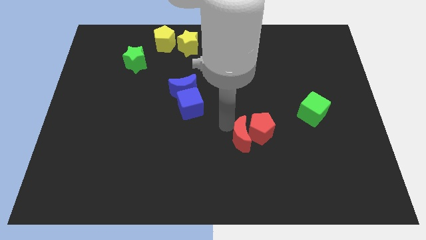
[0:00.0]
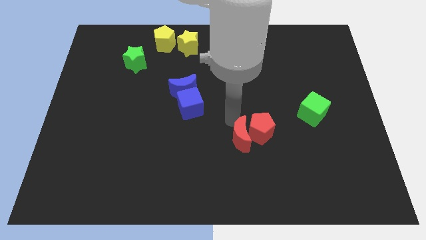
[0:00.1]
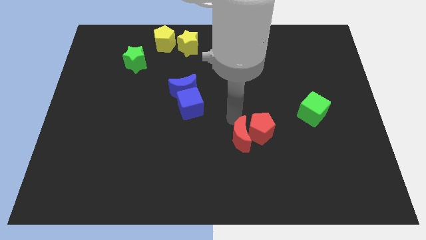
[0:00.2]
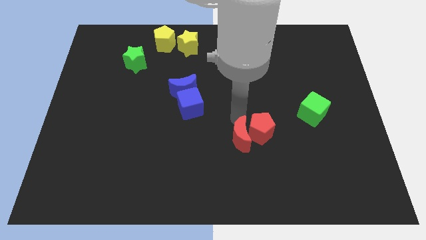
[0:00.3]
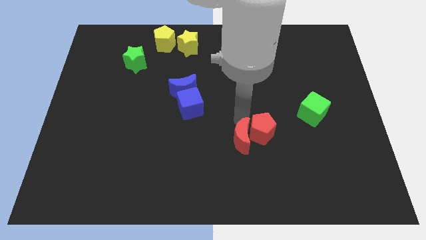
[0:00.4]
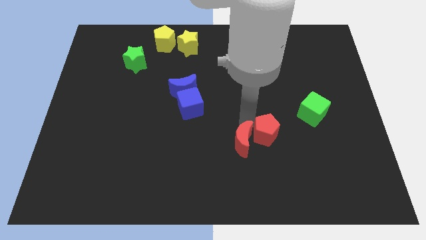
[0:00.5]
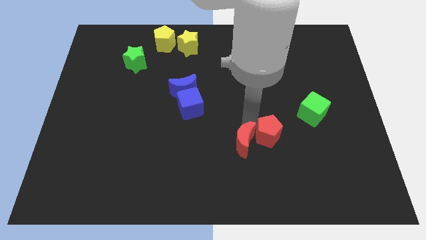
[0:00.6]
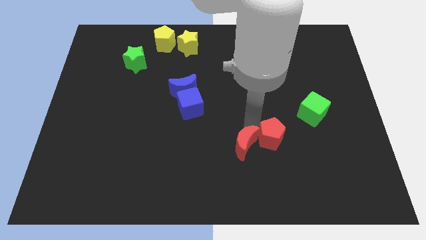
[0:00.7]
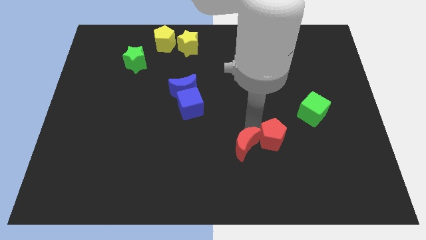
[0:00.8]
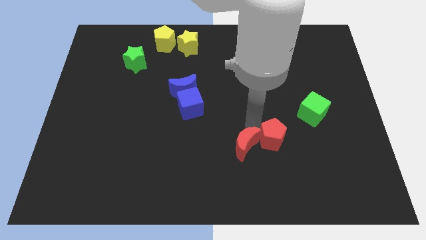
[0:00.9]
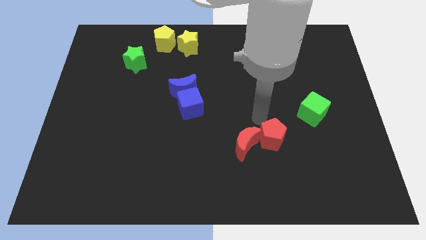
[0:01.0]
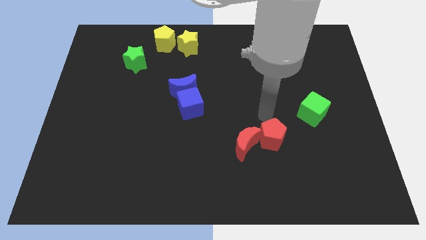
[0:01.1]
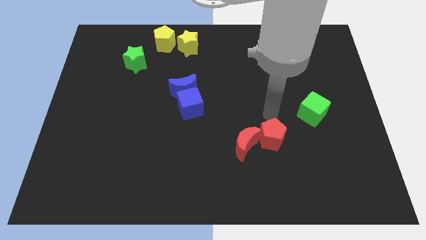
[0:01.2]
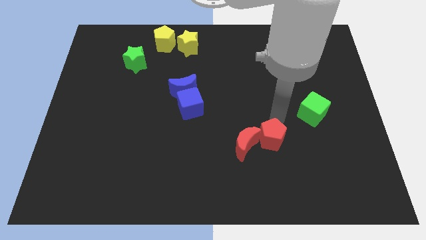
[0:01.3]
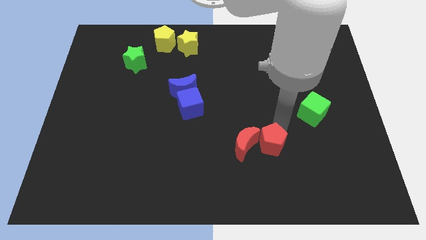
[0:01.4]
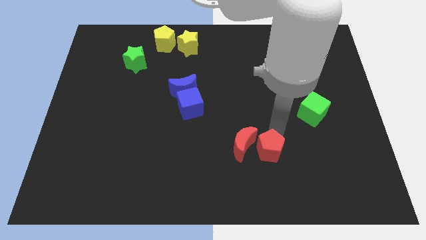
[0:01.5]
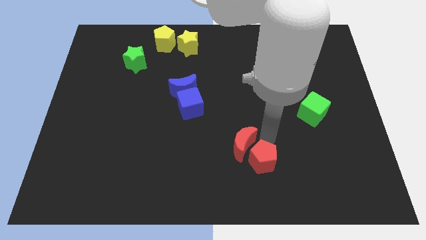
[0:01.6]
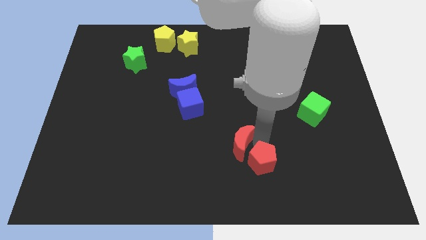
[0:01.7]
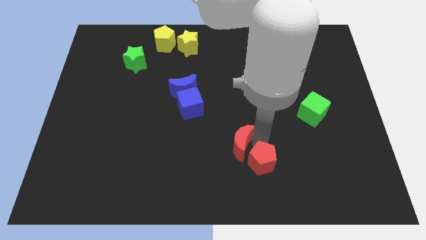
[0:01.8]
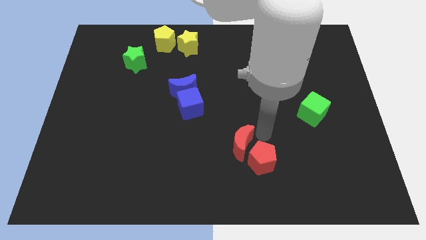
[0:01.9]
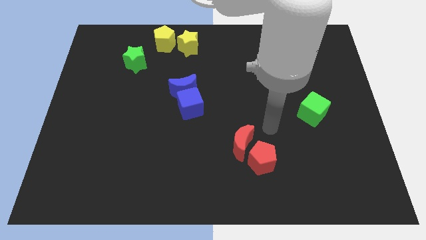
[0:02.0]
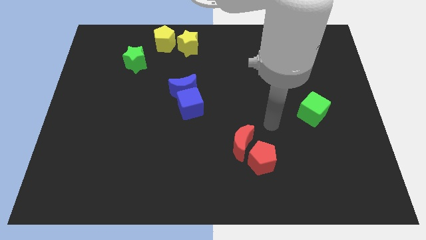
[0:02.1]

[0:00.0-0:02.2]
move red blocks slightly down

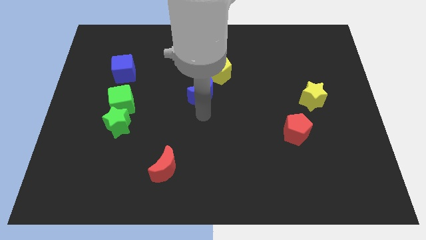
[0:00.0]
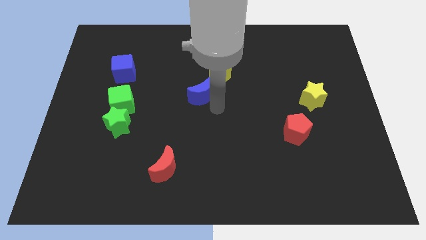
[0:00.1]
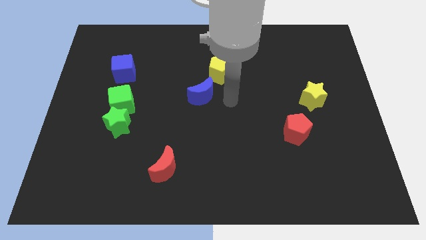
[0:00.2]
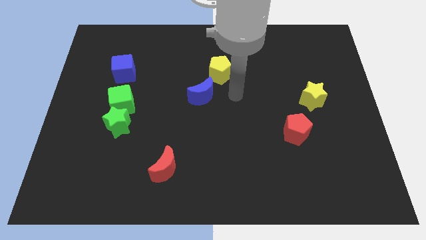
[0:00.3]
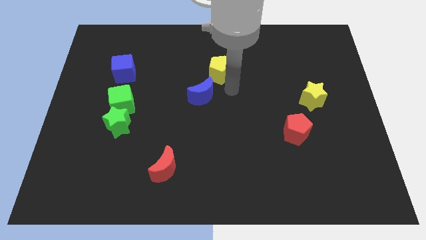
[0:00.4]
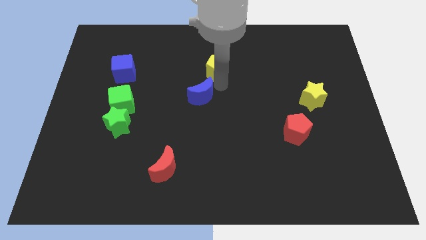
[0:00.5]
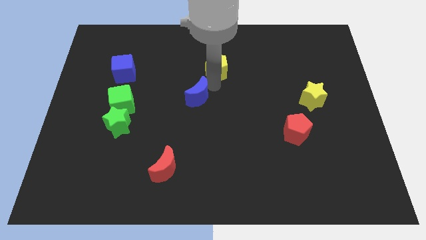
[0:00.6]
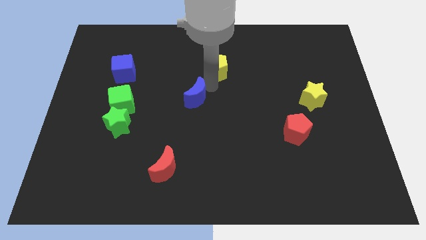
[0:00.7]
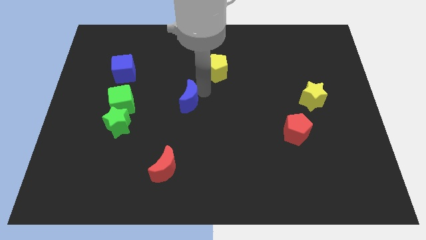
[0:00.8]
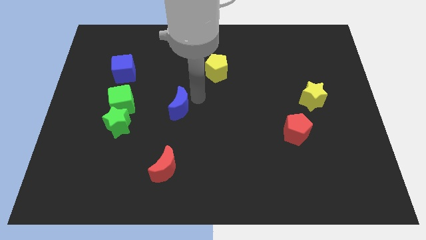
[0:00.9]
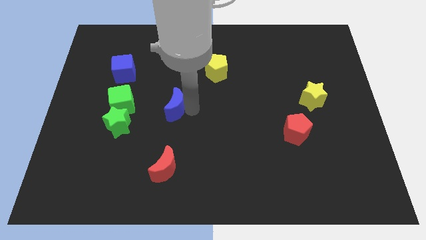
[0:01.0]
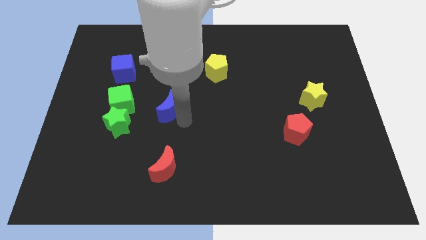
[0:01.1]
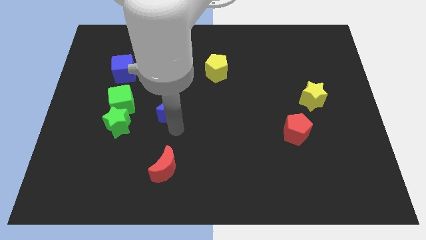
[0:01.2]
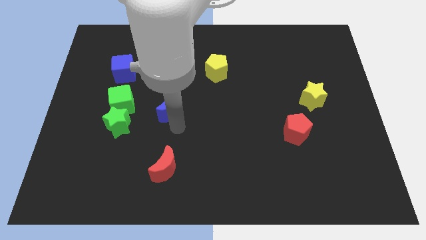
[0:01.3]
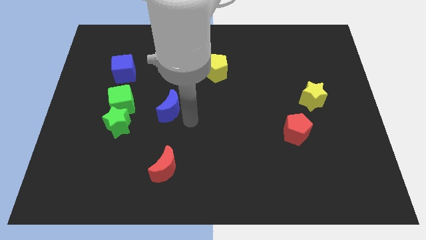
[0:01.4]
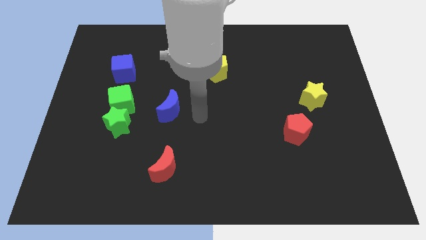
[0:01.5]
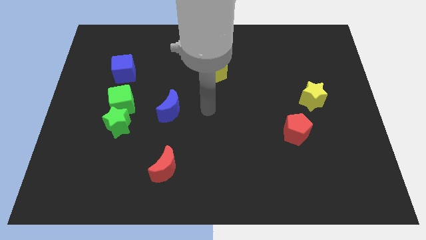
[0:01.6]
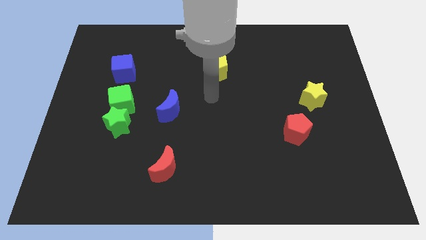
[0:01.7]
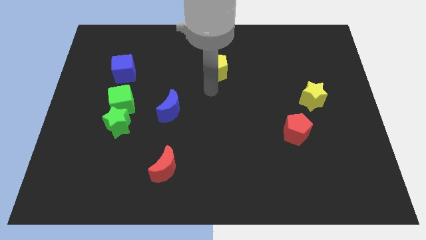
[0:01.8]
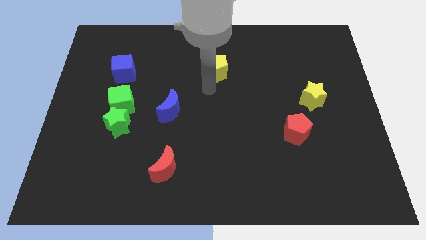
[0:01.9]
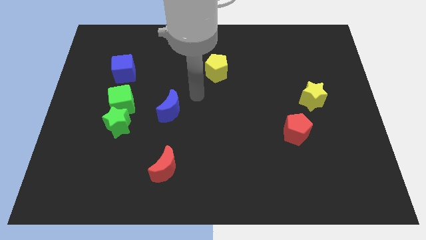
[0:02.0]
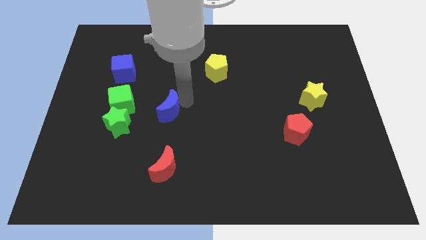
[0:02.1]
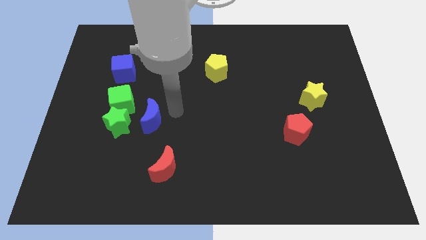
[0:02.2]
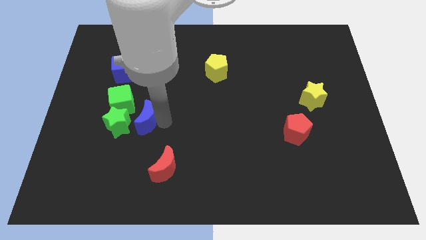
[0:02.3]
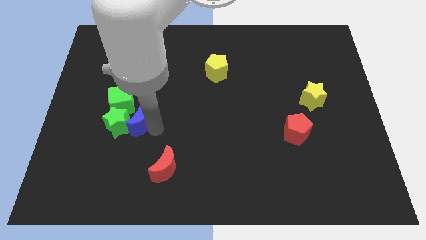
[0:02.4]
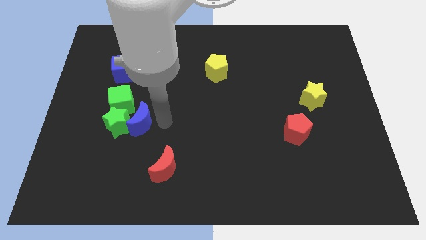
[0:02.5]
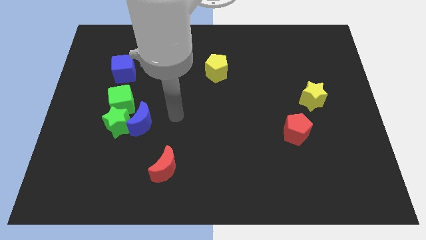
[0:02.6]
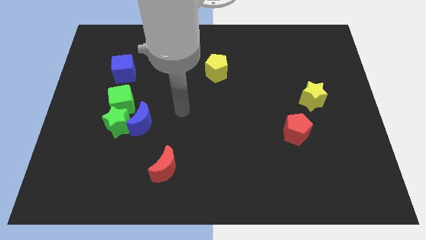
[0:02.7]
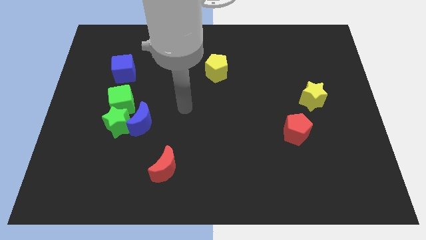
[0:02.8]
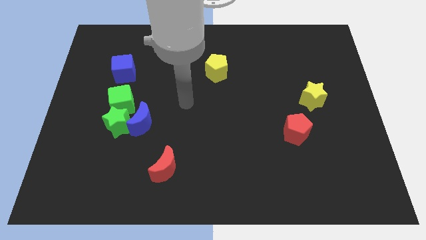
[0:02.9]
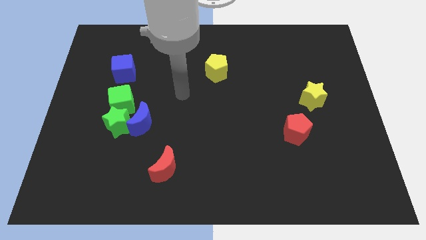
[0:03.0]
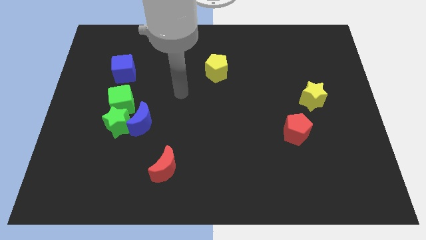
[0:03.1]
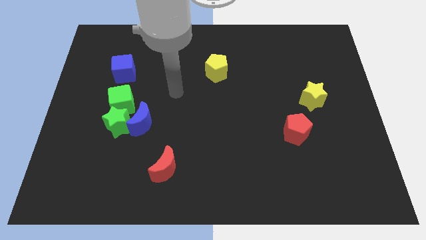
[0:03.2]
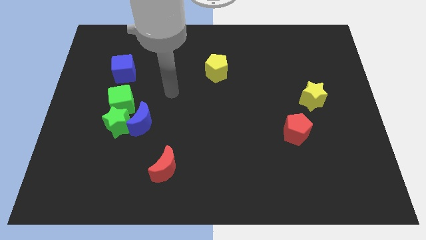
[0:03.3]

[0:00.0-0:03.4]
separate the blue crescent and yellow pentagon by placing the blue crescent to the right side of the green star

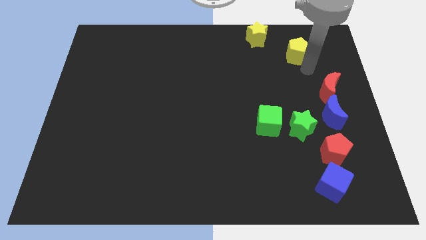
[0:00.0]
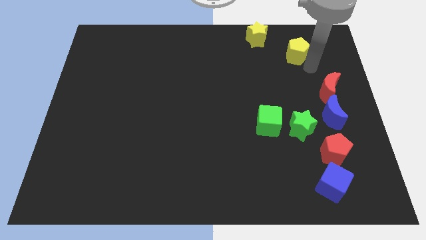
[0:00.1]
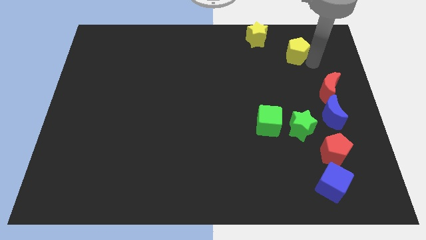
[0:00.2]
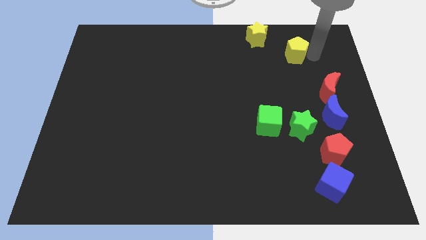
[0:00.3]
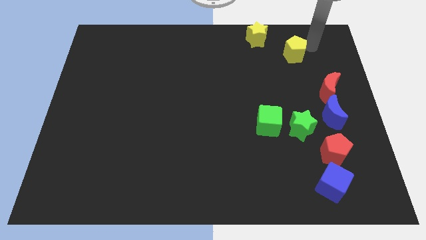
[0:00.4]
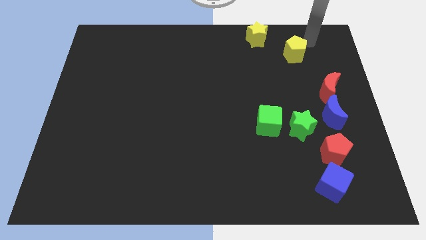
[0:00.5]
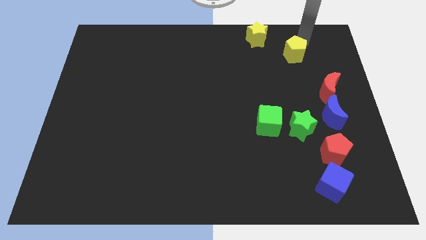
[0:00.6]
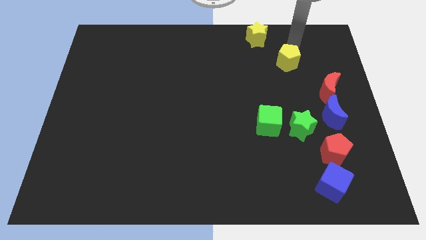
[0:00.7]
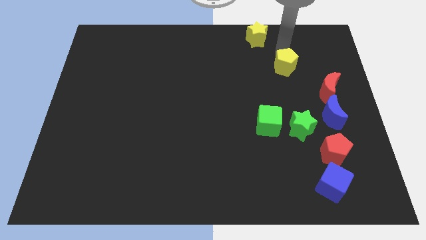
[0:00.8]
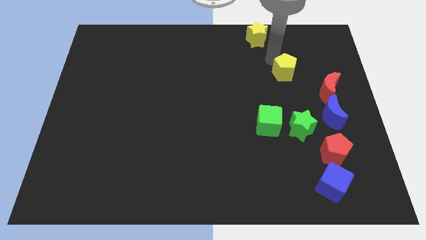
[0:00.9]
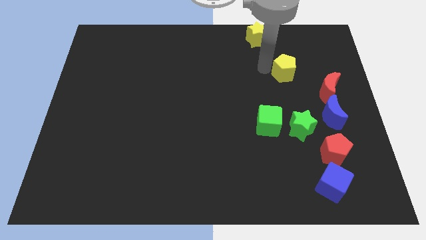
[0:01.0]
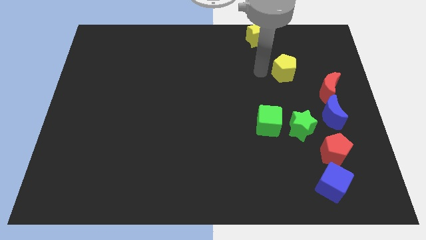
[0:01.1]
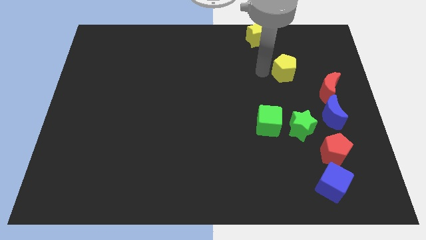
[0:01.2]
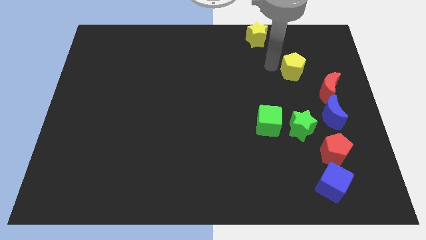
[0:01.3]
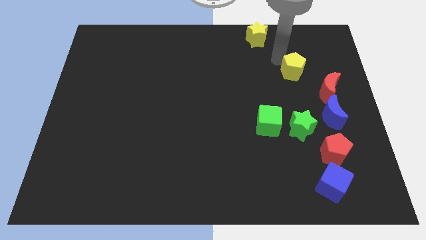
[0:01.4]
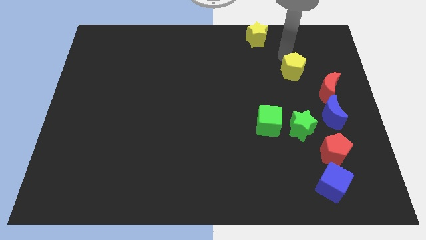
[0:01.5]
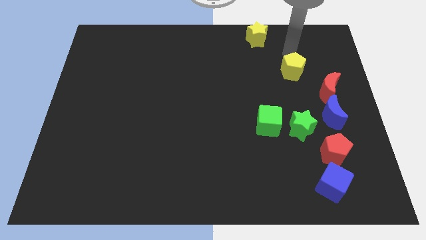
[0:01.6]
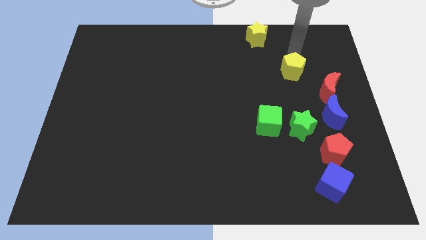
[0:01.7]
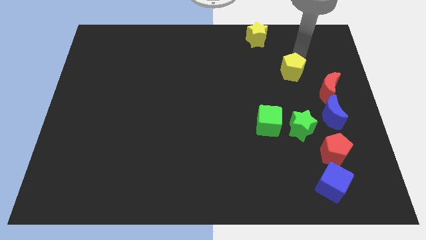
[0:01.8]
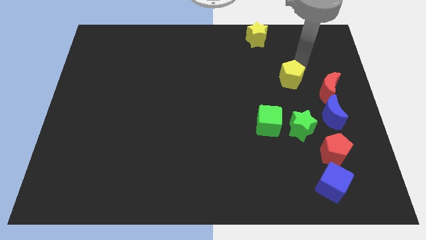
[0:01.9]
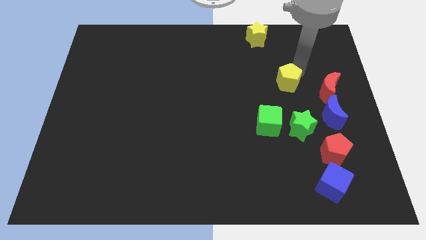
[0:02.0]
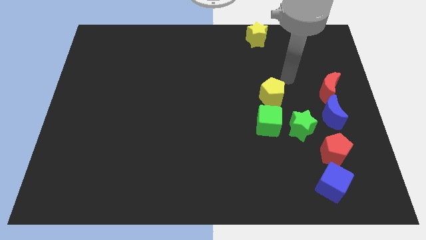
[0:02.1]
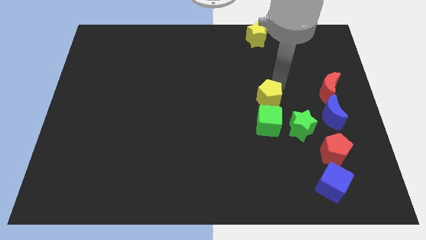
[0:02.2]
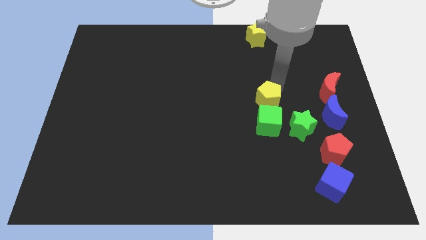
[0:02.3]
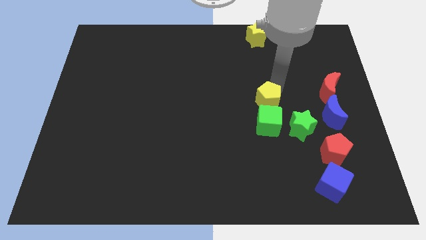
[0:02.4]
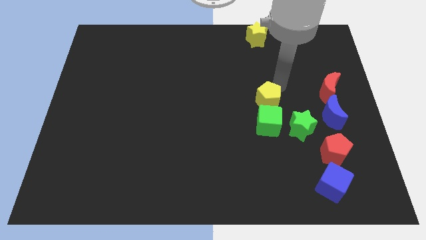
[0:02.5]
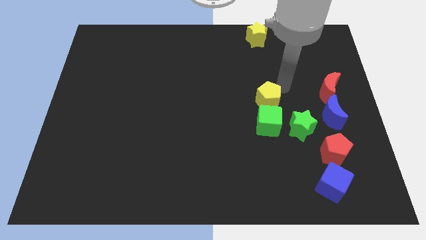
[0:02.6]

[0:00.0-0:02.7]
put the yellow pentagon above the green cube

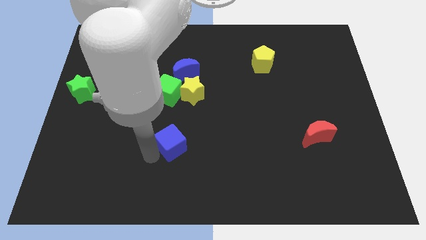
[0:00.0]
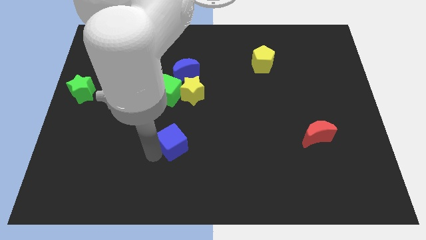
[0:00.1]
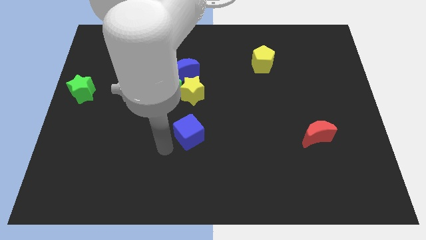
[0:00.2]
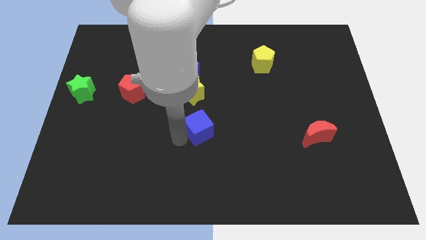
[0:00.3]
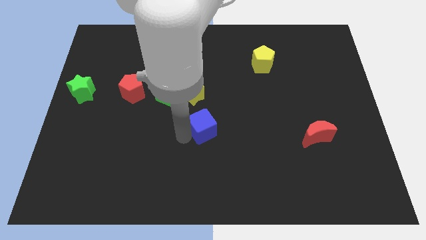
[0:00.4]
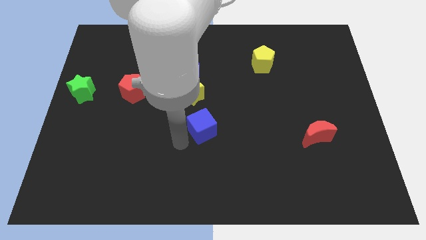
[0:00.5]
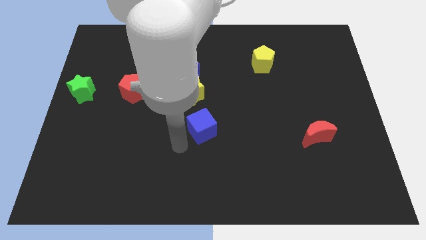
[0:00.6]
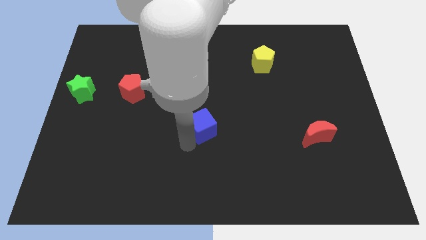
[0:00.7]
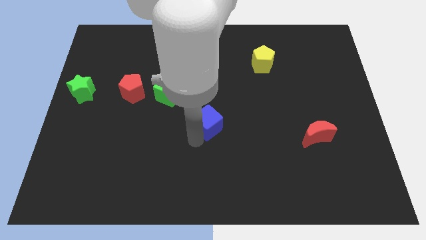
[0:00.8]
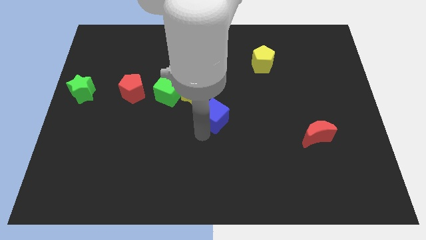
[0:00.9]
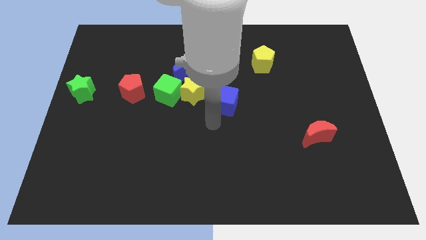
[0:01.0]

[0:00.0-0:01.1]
push the blue slightly to the top
